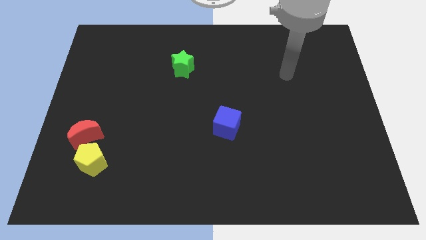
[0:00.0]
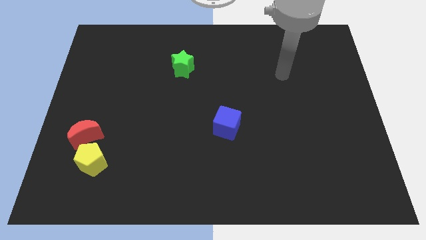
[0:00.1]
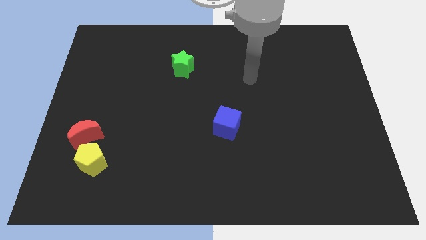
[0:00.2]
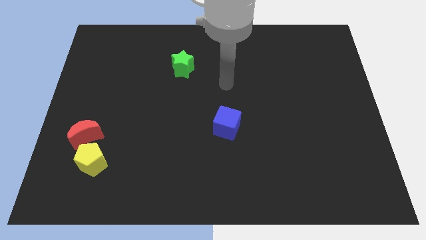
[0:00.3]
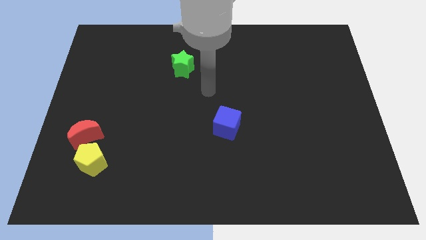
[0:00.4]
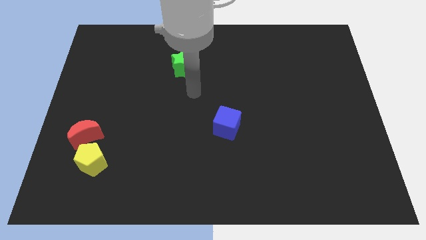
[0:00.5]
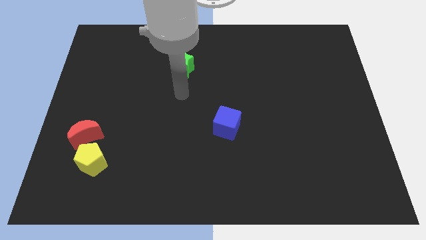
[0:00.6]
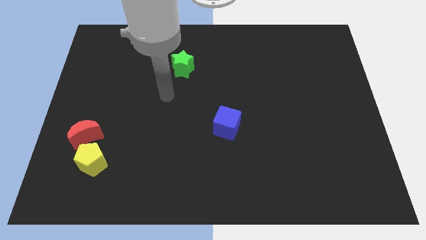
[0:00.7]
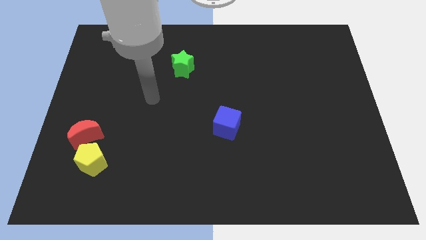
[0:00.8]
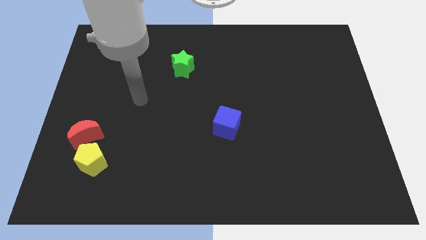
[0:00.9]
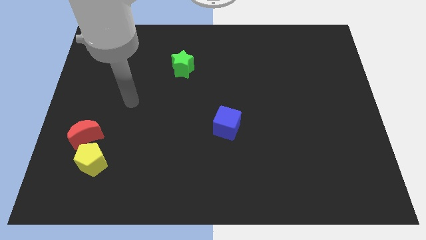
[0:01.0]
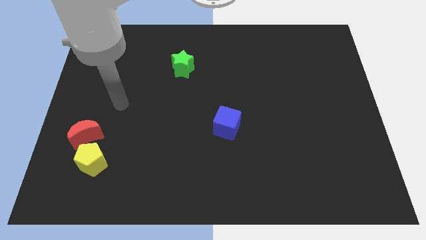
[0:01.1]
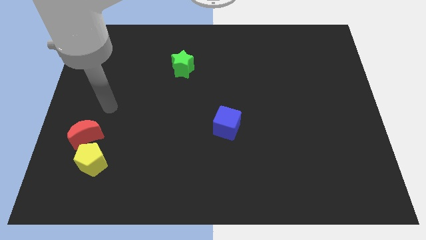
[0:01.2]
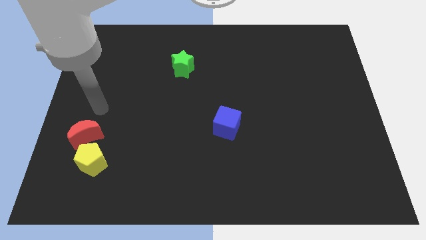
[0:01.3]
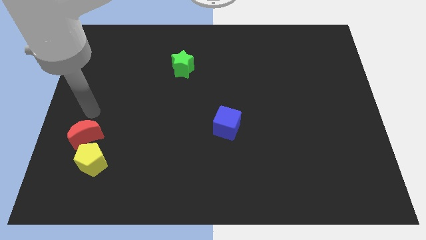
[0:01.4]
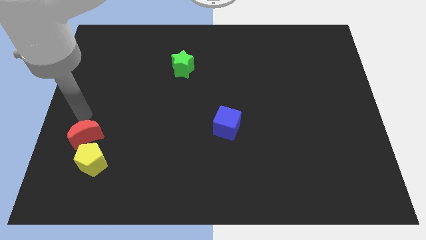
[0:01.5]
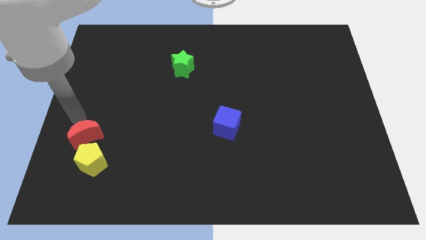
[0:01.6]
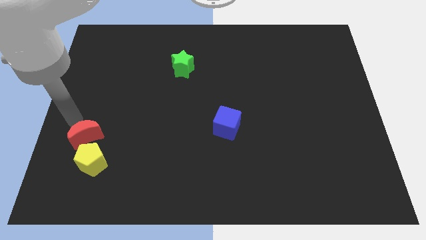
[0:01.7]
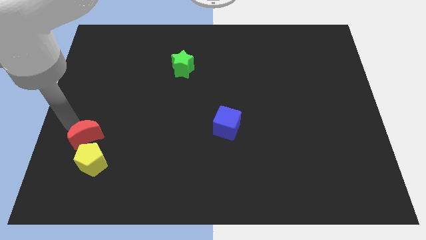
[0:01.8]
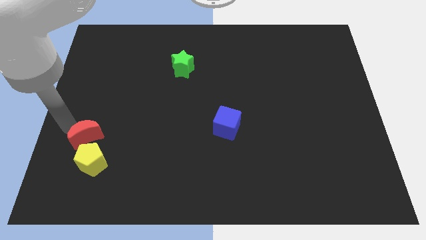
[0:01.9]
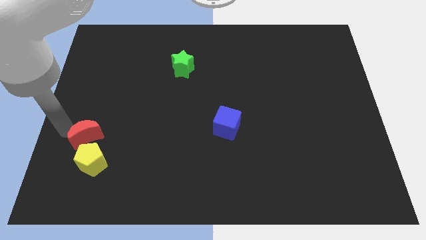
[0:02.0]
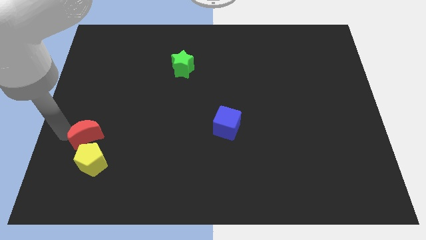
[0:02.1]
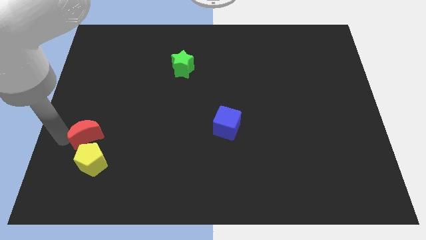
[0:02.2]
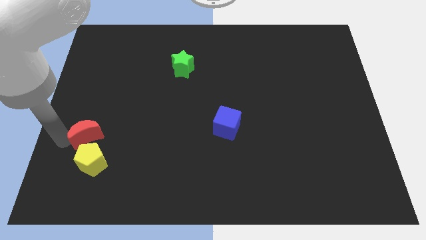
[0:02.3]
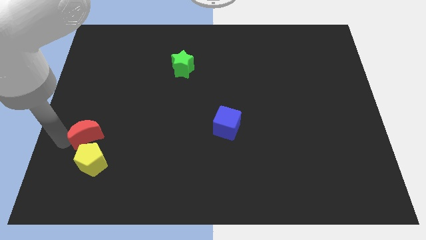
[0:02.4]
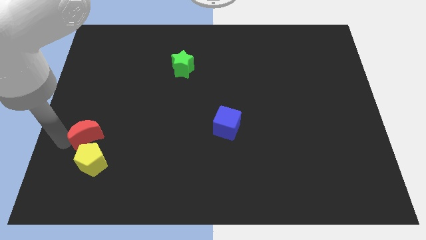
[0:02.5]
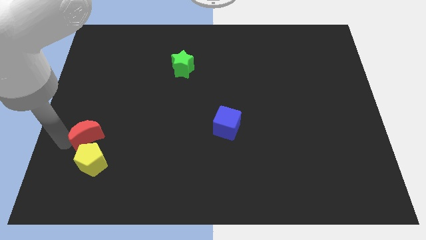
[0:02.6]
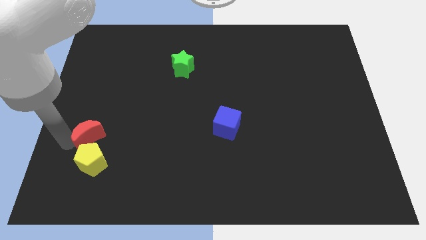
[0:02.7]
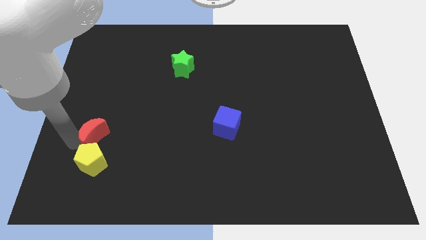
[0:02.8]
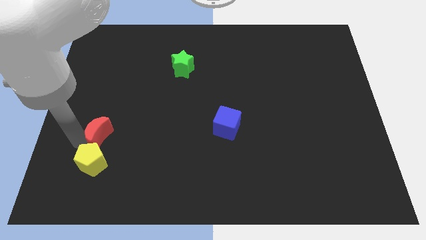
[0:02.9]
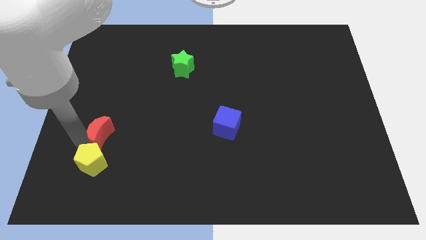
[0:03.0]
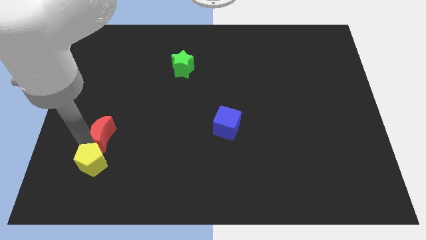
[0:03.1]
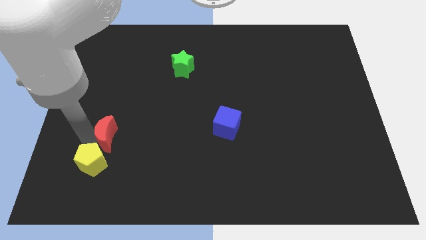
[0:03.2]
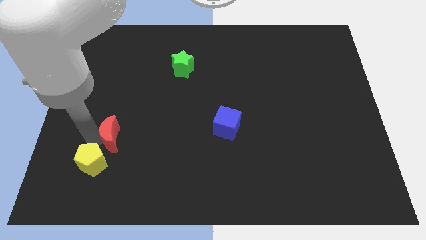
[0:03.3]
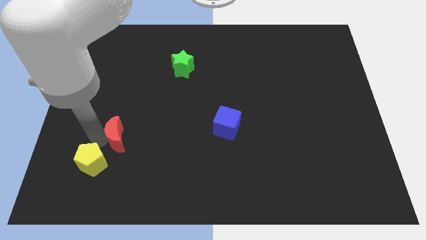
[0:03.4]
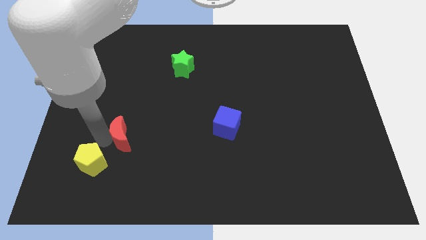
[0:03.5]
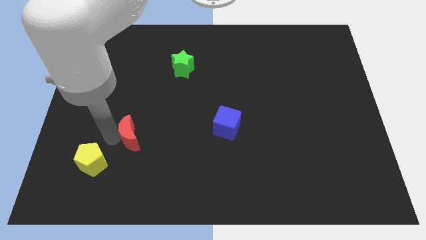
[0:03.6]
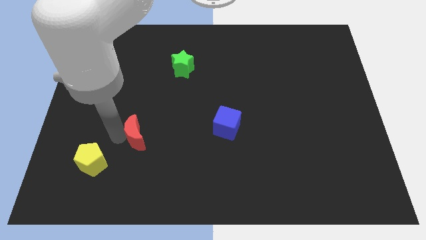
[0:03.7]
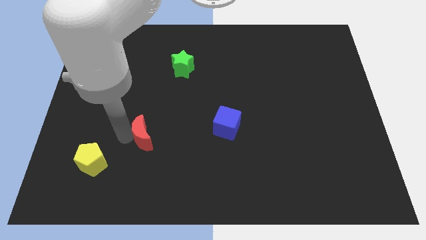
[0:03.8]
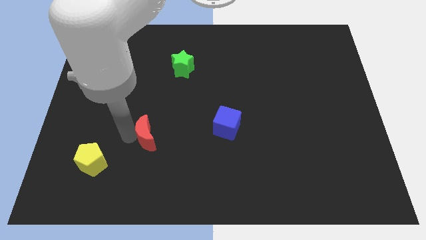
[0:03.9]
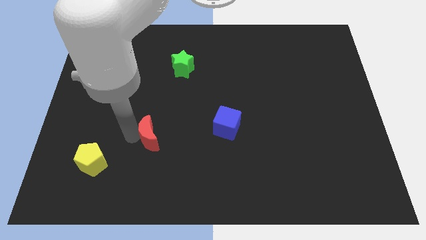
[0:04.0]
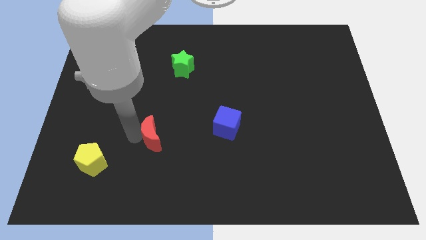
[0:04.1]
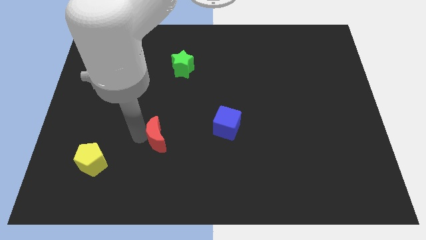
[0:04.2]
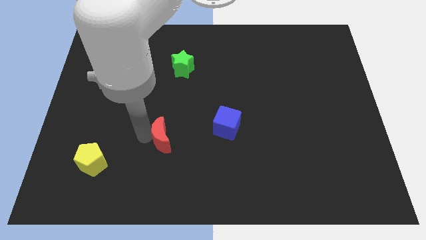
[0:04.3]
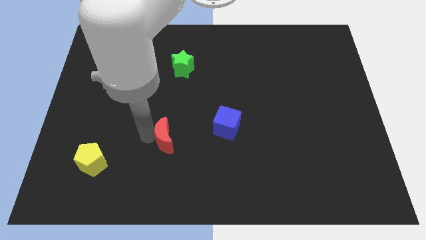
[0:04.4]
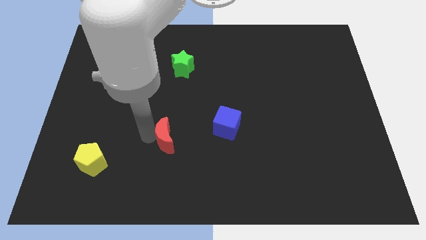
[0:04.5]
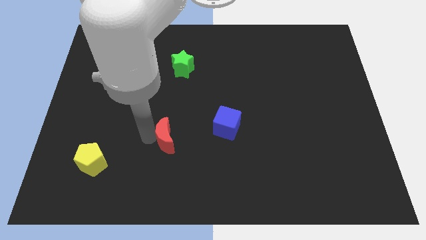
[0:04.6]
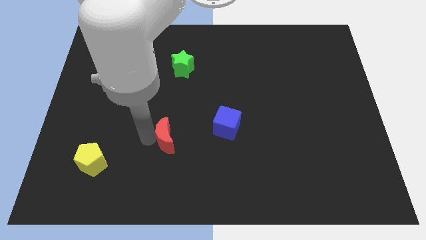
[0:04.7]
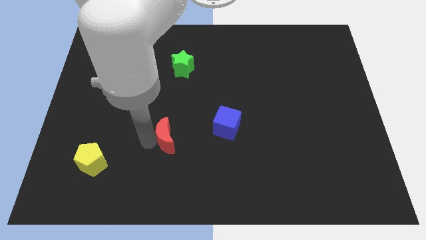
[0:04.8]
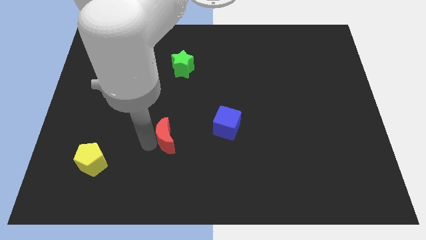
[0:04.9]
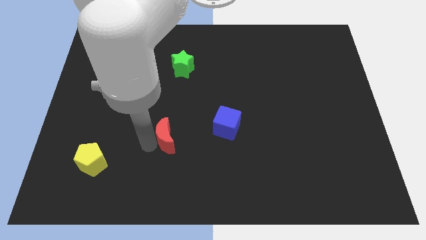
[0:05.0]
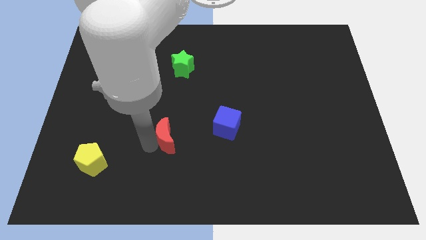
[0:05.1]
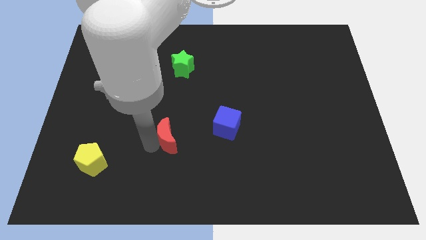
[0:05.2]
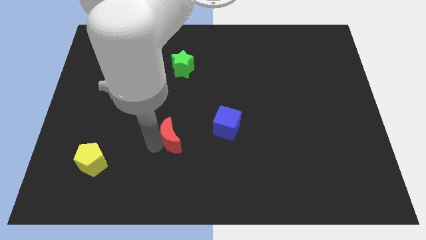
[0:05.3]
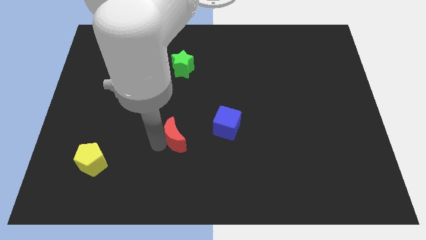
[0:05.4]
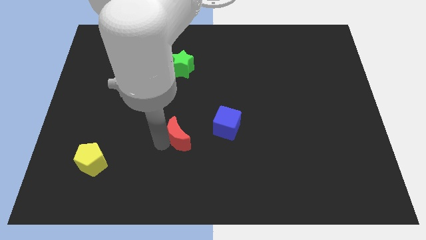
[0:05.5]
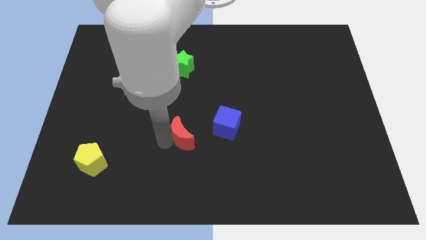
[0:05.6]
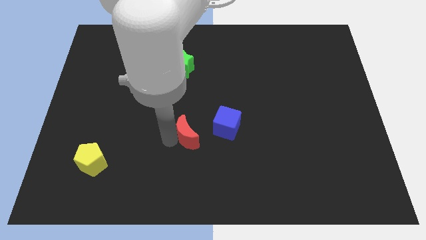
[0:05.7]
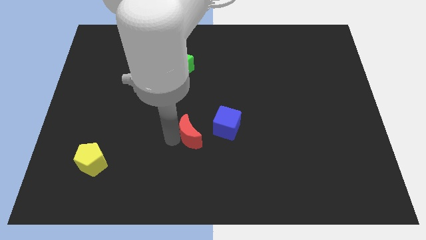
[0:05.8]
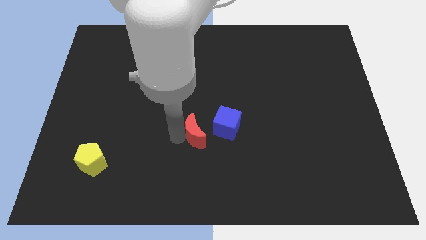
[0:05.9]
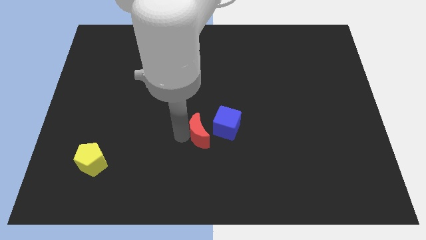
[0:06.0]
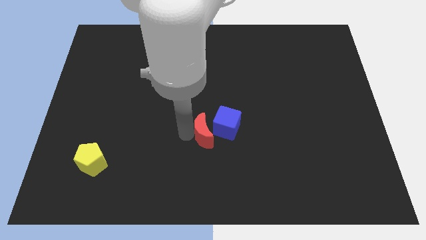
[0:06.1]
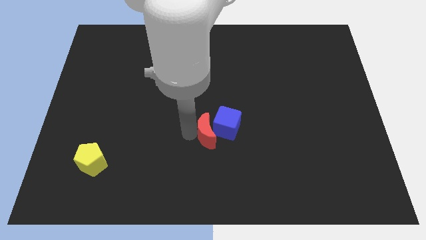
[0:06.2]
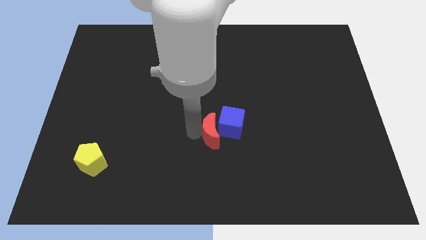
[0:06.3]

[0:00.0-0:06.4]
push the moon next to the blue cube

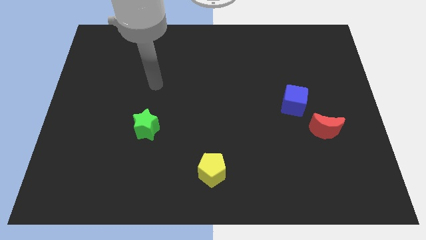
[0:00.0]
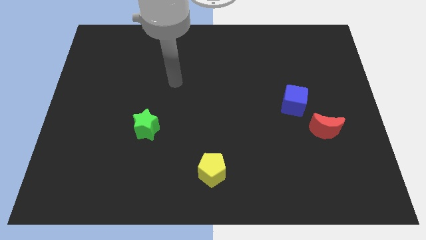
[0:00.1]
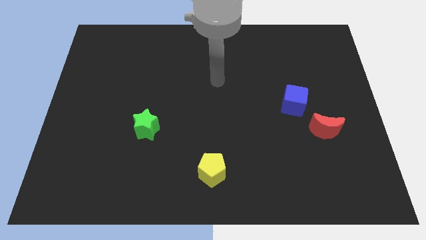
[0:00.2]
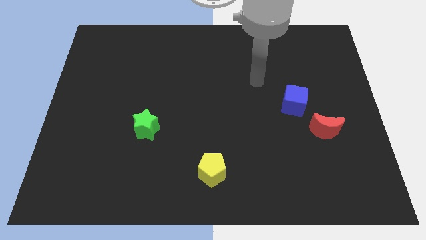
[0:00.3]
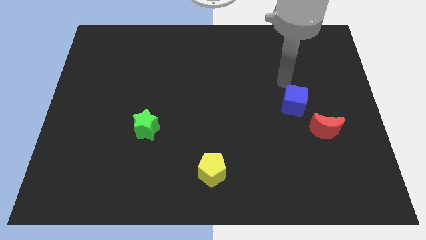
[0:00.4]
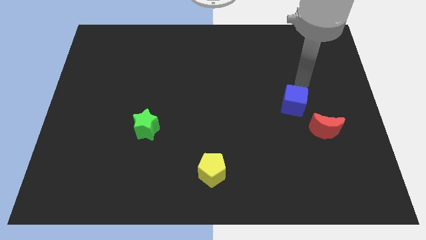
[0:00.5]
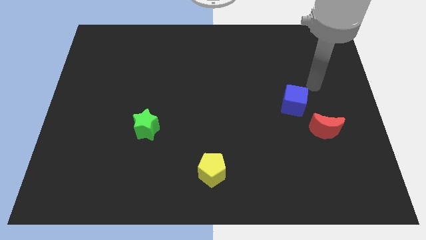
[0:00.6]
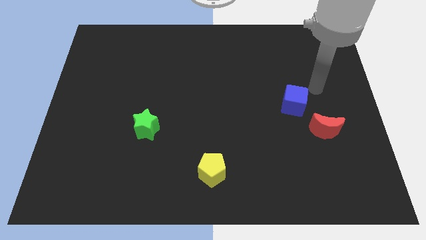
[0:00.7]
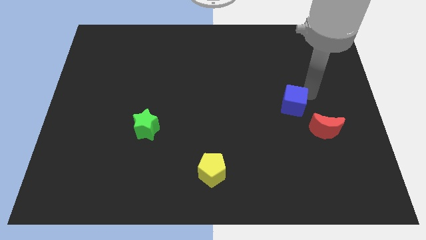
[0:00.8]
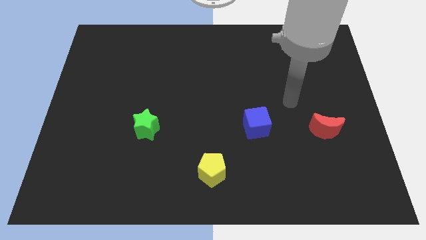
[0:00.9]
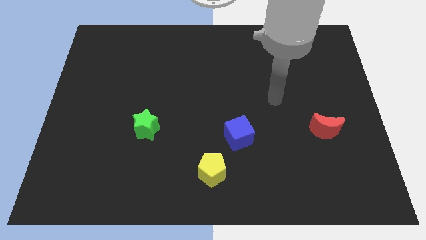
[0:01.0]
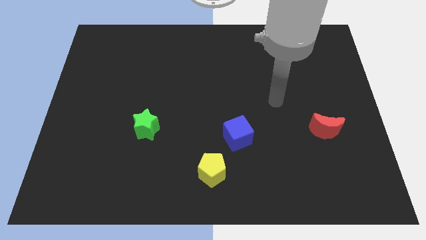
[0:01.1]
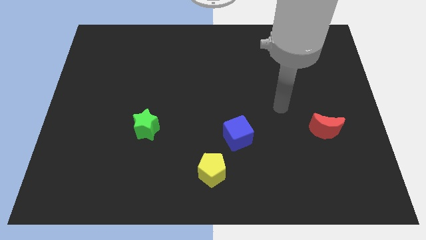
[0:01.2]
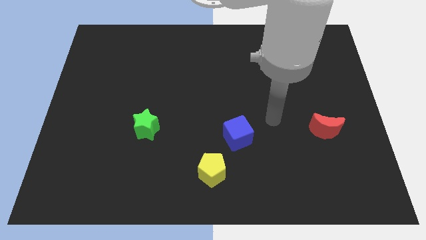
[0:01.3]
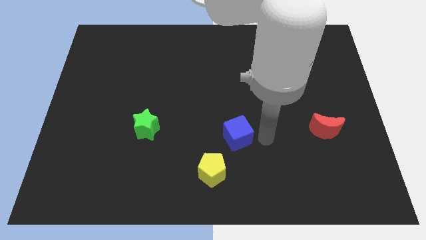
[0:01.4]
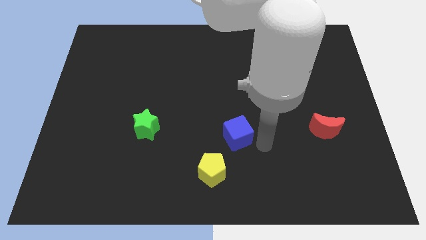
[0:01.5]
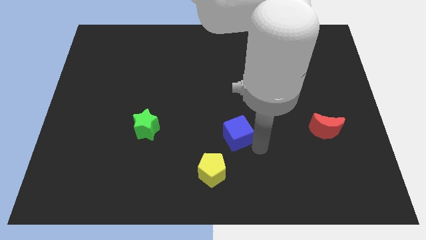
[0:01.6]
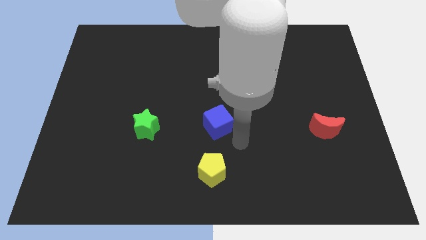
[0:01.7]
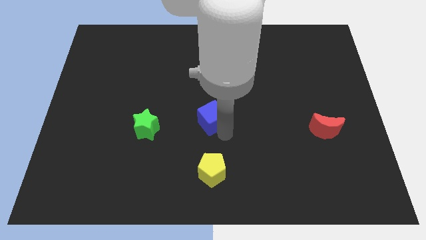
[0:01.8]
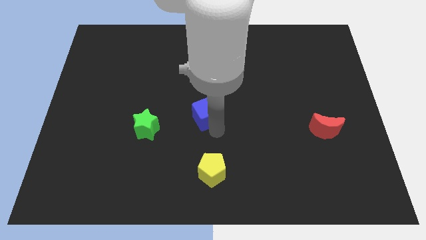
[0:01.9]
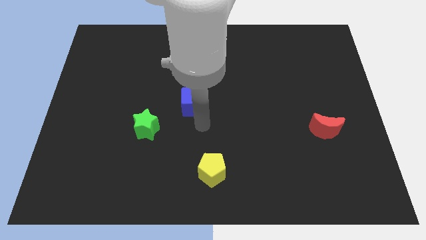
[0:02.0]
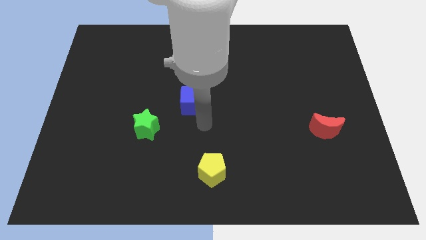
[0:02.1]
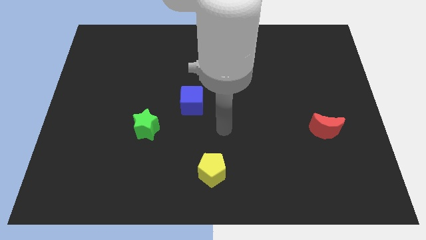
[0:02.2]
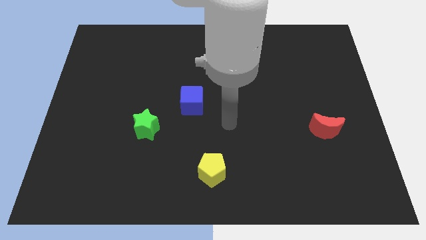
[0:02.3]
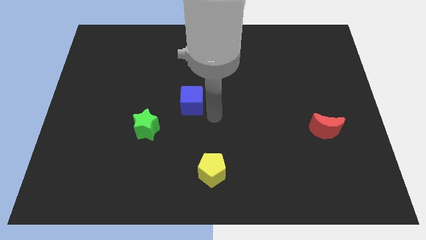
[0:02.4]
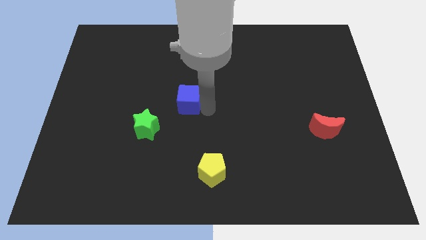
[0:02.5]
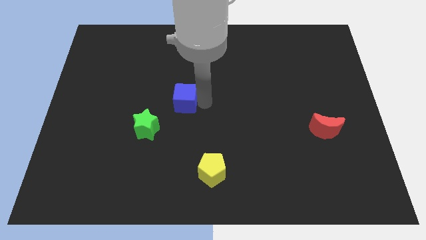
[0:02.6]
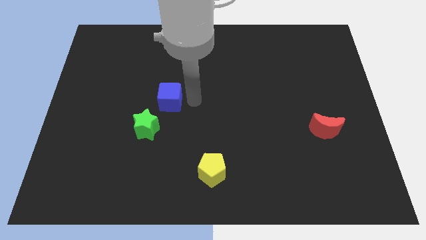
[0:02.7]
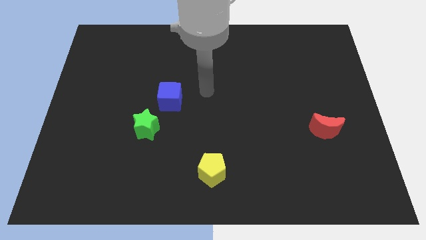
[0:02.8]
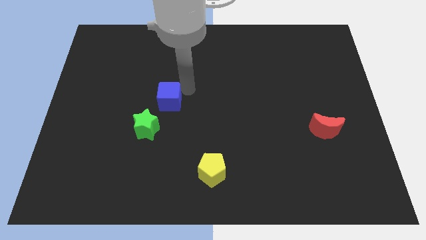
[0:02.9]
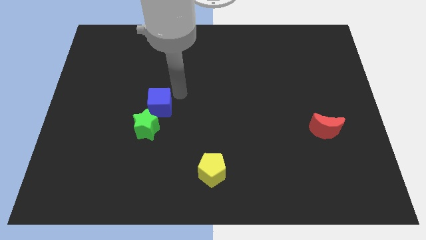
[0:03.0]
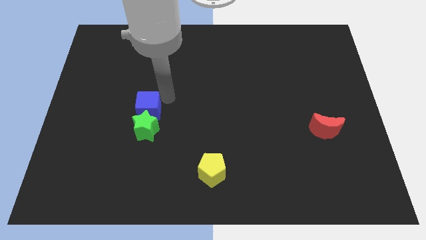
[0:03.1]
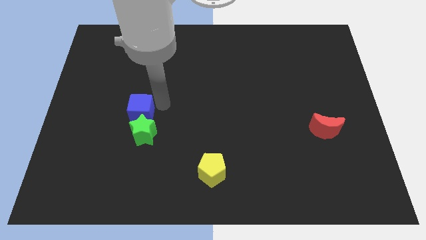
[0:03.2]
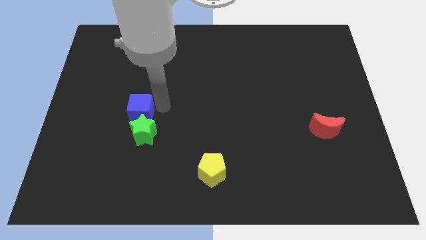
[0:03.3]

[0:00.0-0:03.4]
slide the cube to the green block
